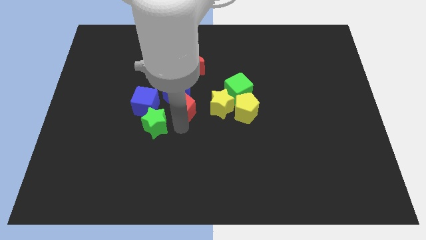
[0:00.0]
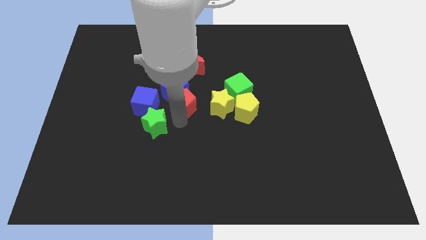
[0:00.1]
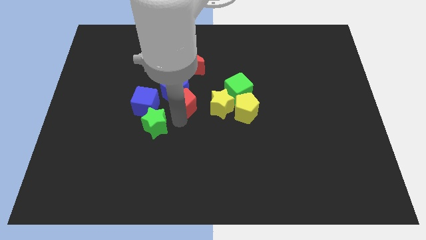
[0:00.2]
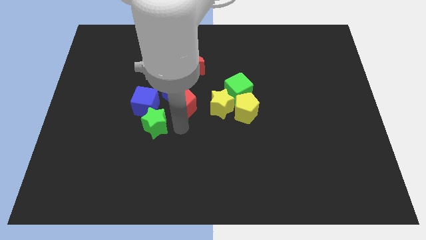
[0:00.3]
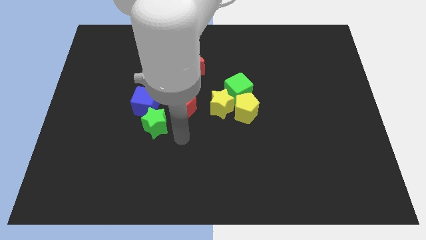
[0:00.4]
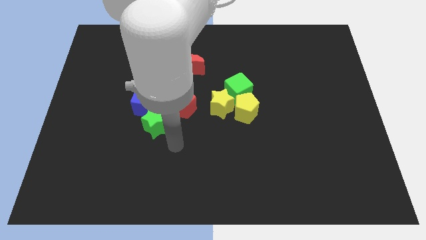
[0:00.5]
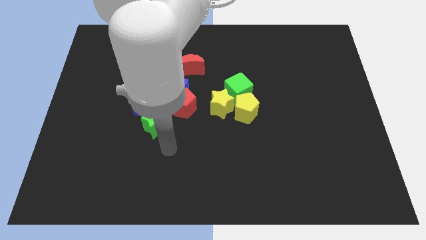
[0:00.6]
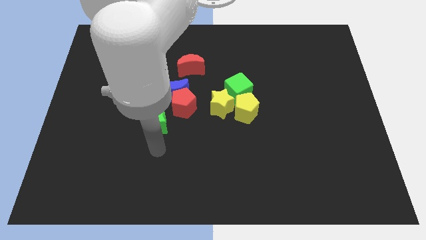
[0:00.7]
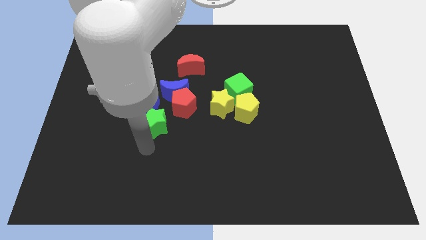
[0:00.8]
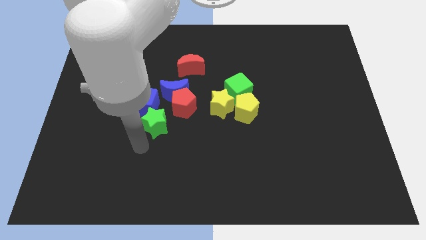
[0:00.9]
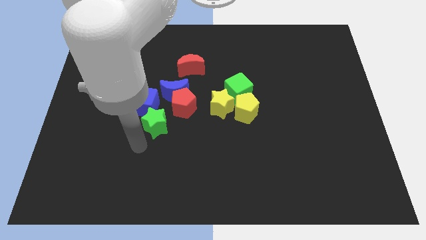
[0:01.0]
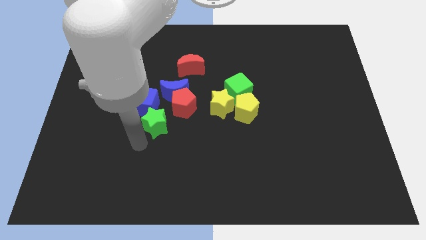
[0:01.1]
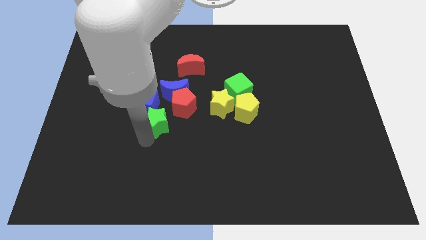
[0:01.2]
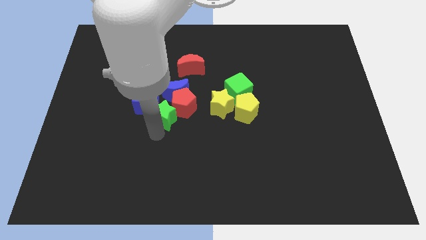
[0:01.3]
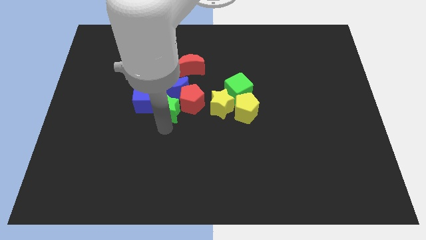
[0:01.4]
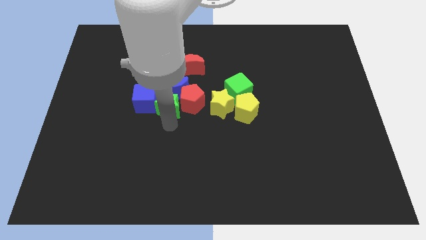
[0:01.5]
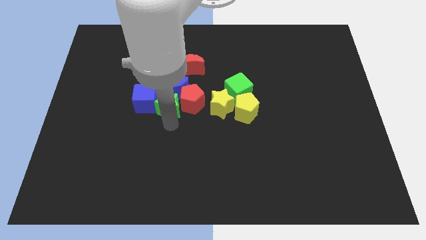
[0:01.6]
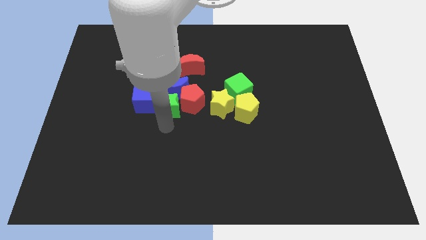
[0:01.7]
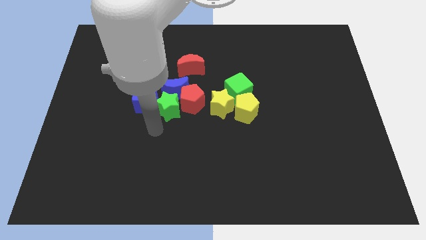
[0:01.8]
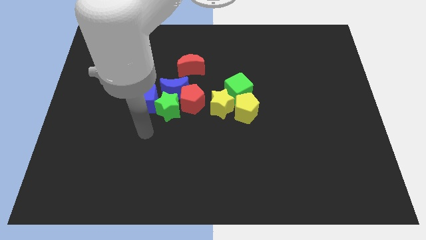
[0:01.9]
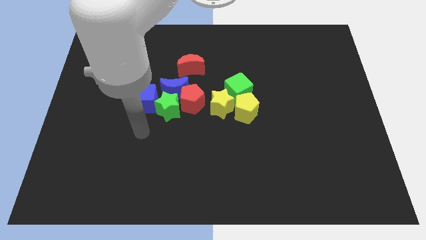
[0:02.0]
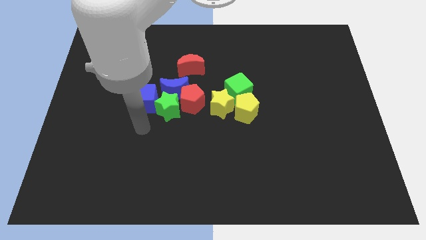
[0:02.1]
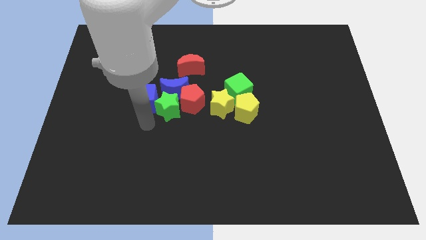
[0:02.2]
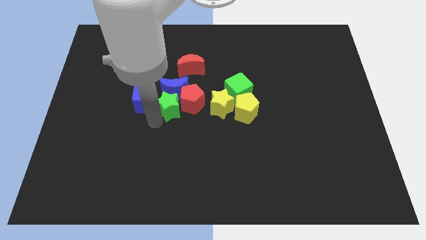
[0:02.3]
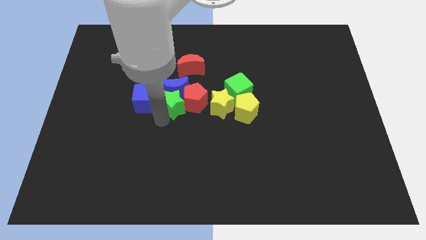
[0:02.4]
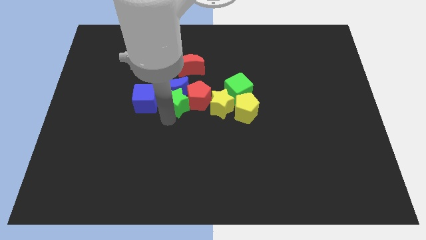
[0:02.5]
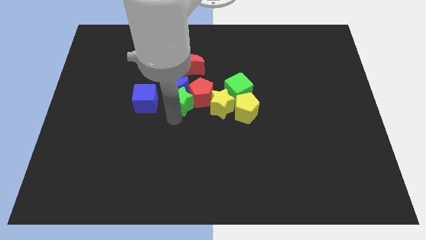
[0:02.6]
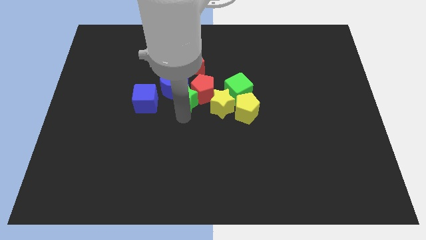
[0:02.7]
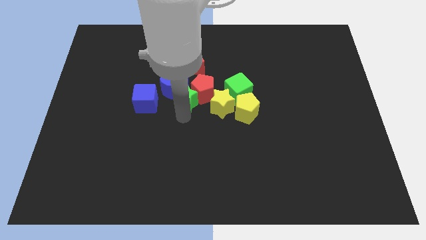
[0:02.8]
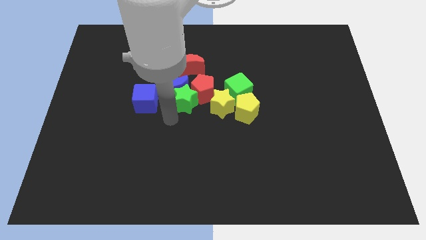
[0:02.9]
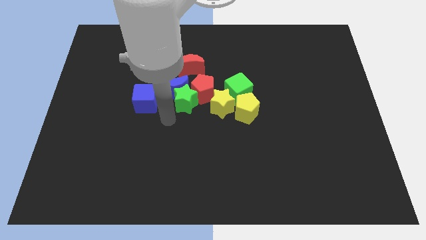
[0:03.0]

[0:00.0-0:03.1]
push the green star into the bottom of the red pentagon and blue crescent

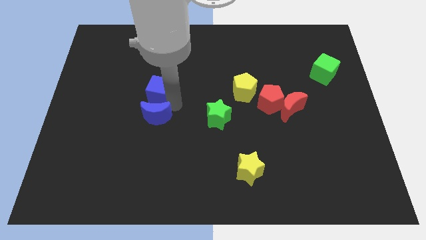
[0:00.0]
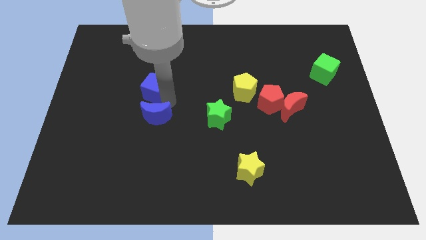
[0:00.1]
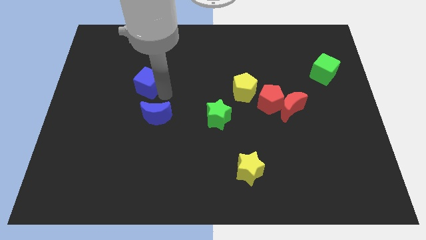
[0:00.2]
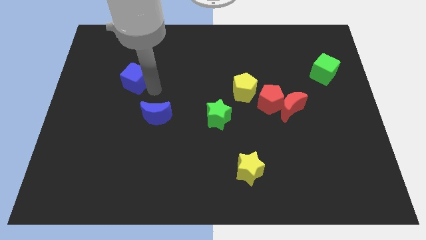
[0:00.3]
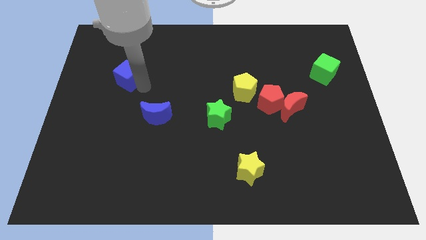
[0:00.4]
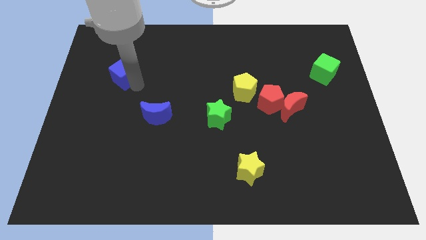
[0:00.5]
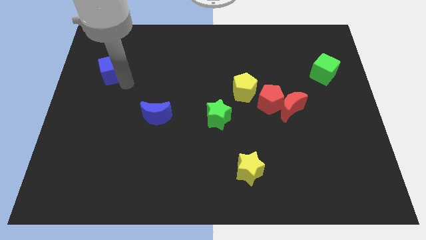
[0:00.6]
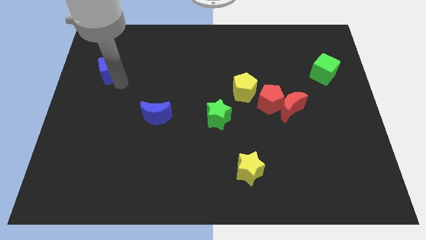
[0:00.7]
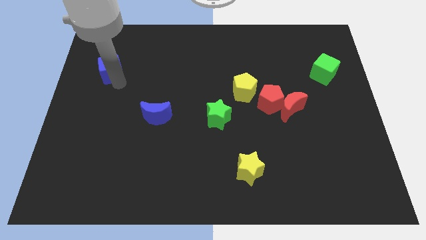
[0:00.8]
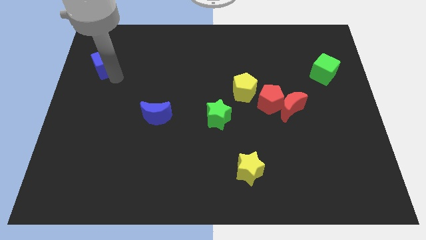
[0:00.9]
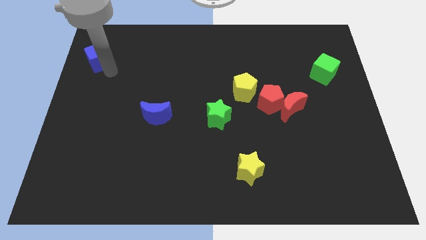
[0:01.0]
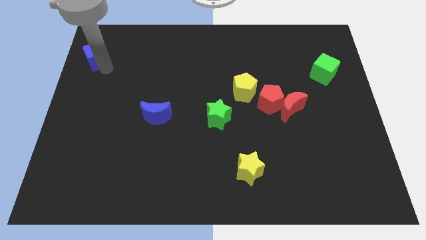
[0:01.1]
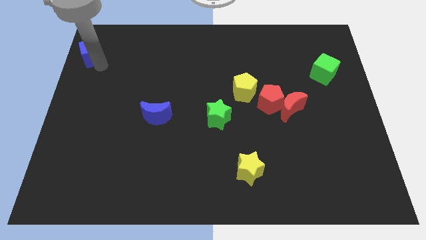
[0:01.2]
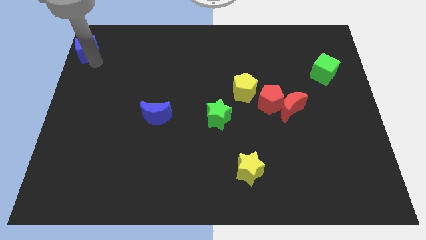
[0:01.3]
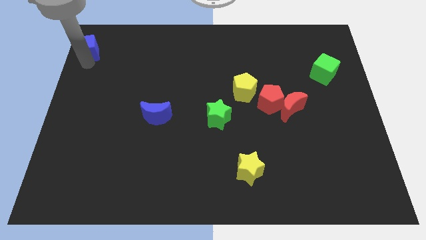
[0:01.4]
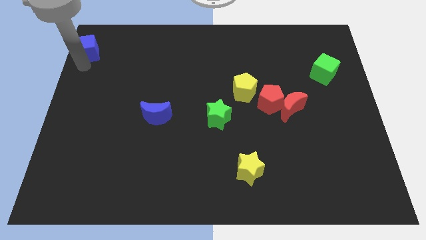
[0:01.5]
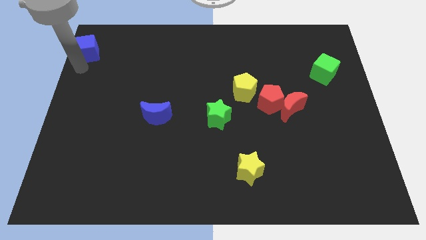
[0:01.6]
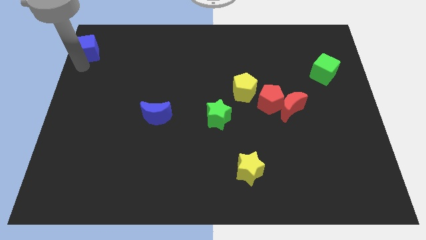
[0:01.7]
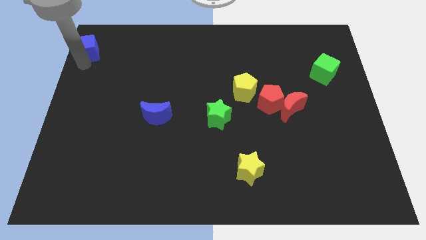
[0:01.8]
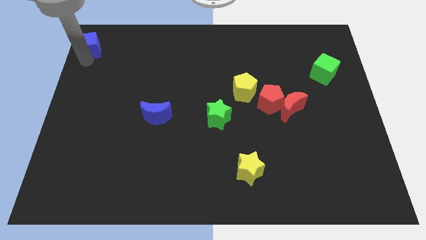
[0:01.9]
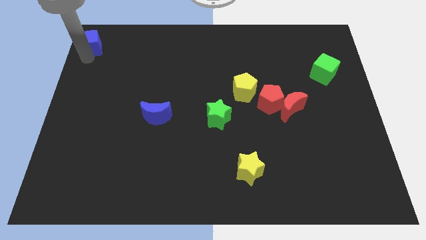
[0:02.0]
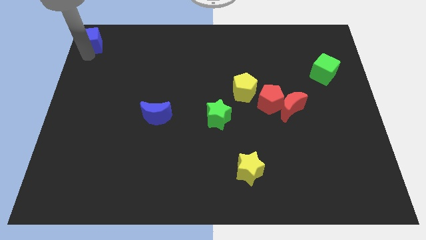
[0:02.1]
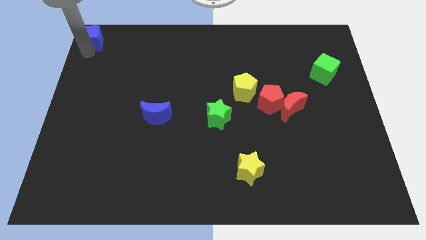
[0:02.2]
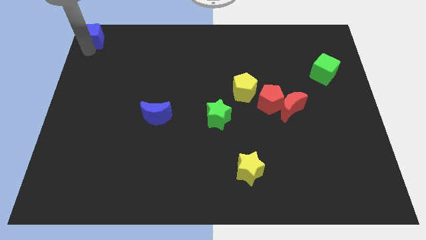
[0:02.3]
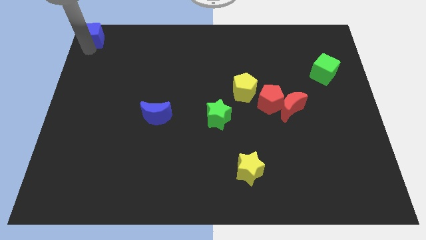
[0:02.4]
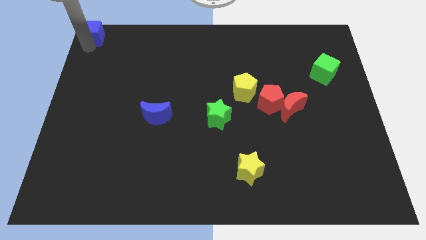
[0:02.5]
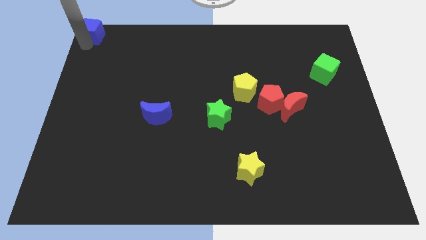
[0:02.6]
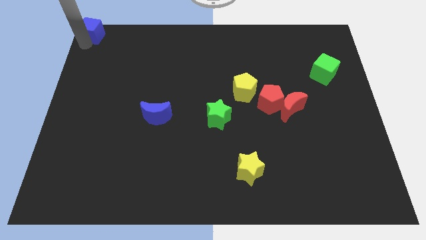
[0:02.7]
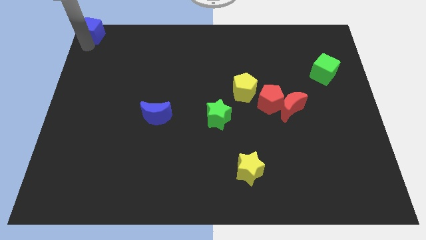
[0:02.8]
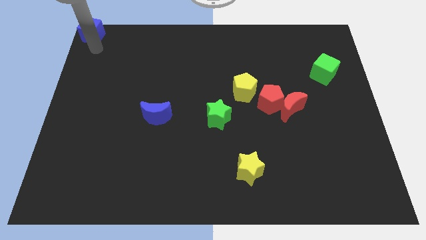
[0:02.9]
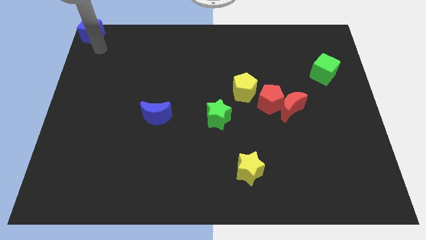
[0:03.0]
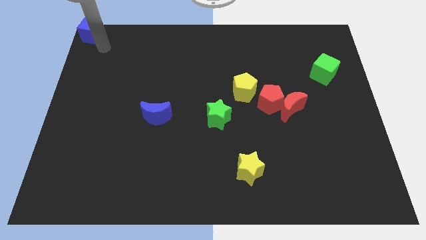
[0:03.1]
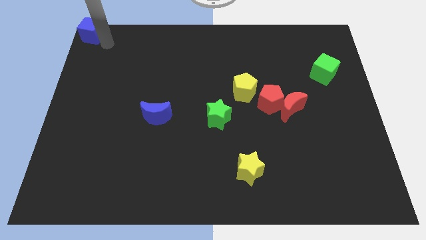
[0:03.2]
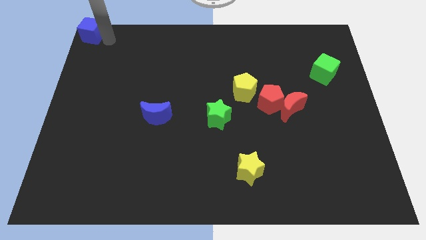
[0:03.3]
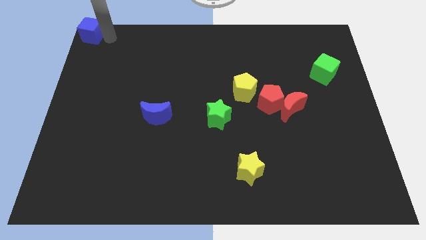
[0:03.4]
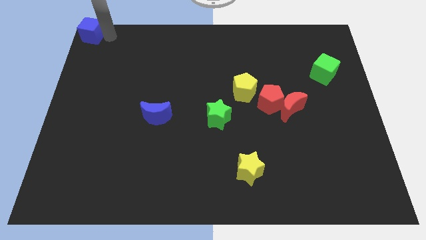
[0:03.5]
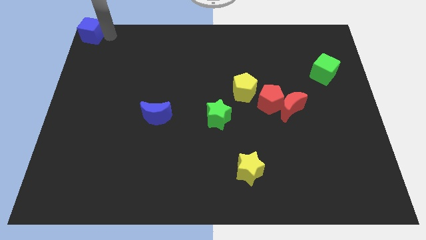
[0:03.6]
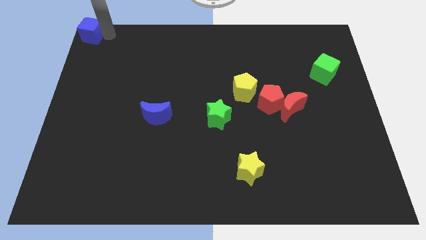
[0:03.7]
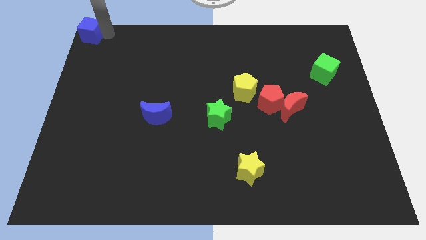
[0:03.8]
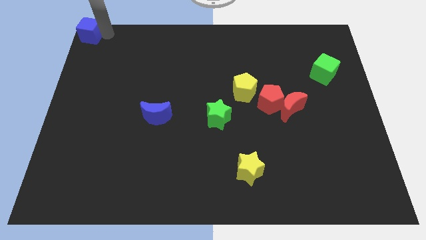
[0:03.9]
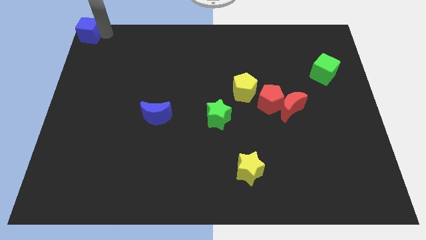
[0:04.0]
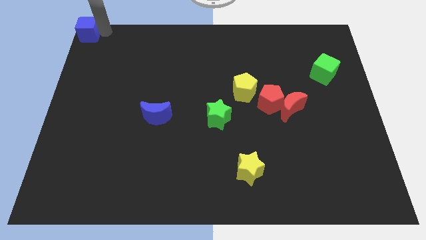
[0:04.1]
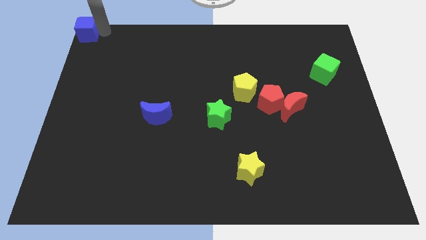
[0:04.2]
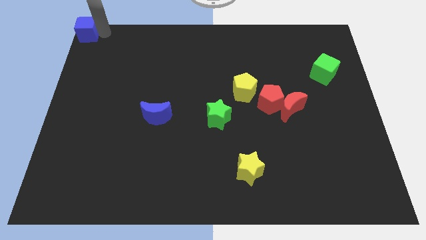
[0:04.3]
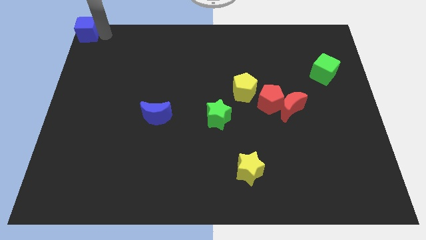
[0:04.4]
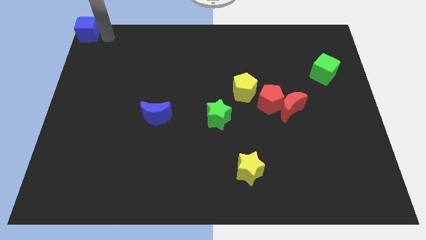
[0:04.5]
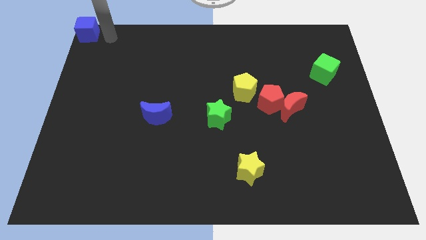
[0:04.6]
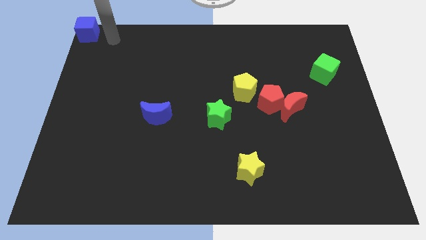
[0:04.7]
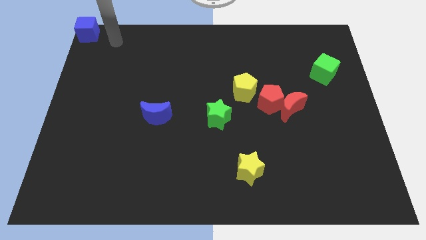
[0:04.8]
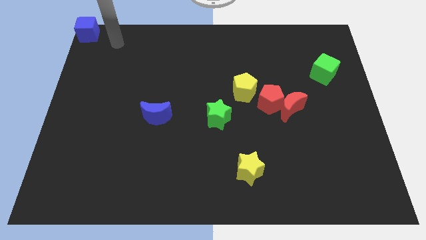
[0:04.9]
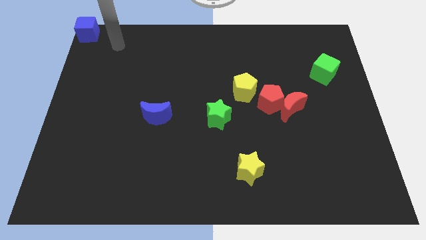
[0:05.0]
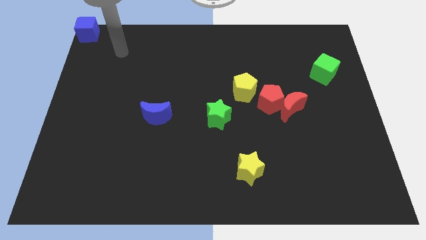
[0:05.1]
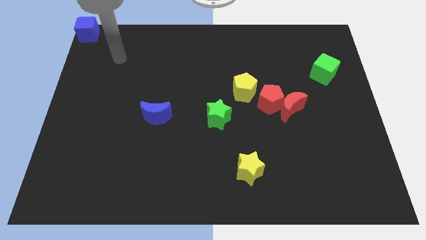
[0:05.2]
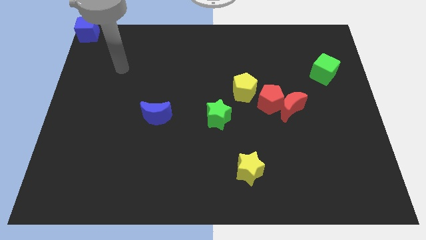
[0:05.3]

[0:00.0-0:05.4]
place the blue cube at the top left corner of the board

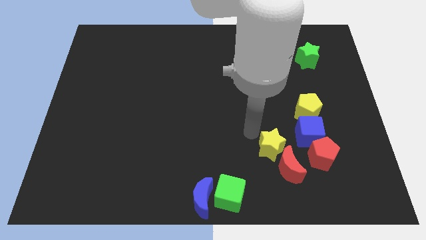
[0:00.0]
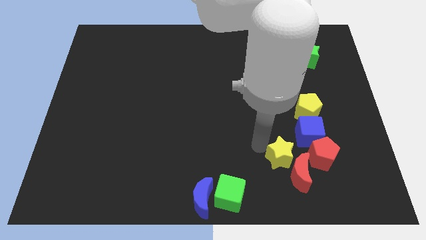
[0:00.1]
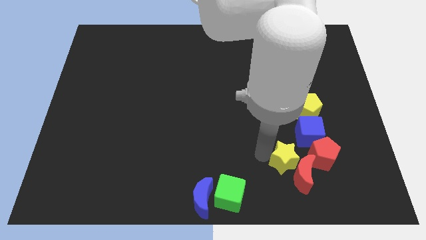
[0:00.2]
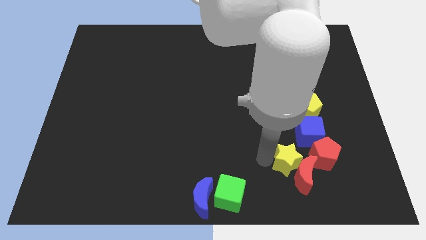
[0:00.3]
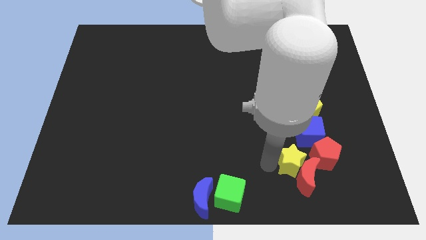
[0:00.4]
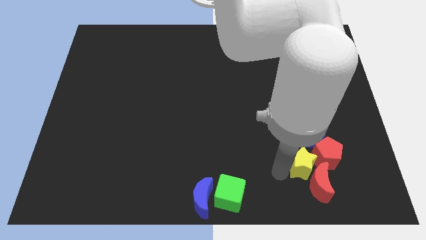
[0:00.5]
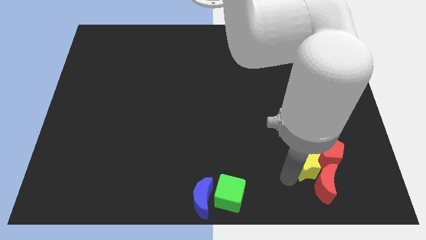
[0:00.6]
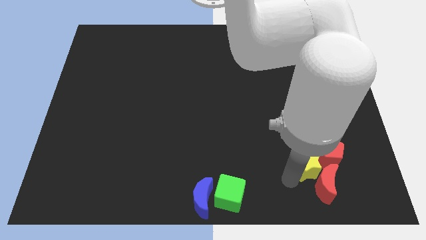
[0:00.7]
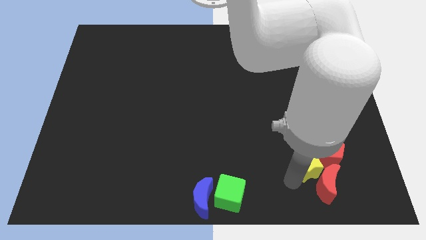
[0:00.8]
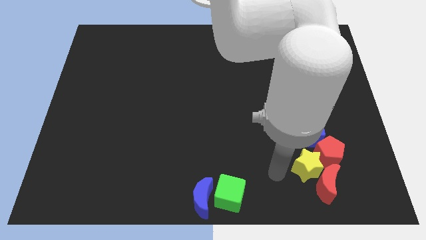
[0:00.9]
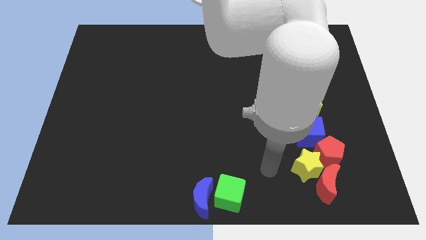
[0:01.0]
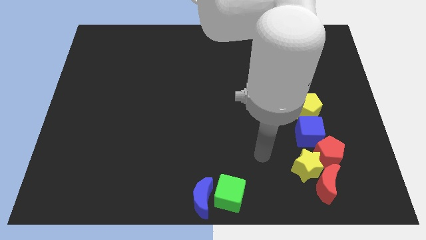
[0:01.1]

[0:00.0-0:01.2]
push the yellow star into the red pentagon
